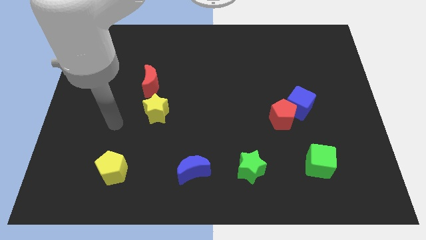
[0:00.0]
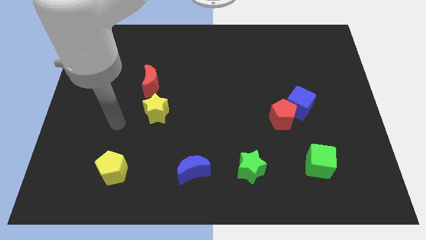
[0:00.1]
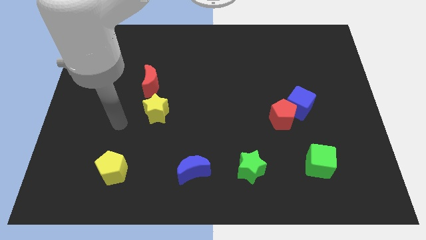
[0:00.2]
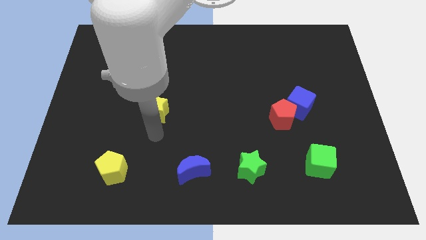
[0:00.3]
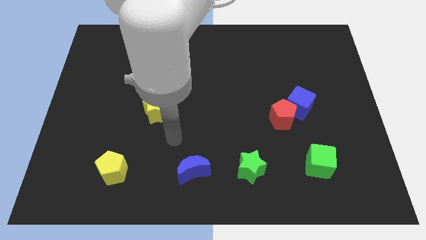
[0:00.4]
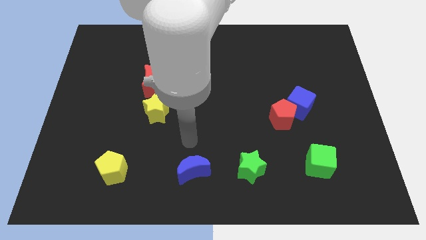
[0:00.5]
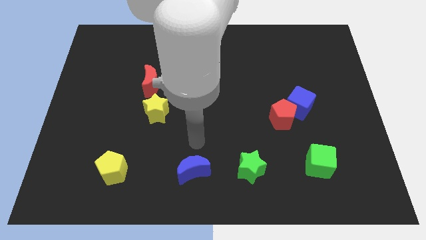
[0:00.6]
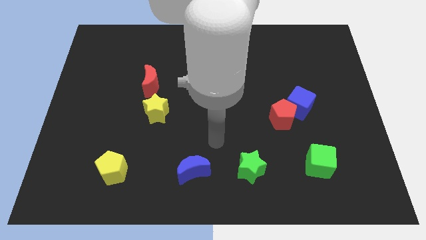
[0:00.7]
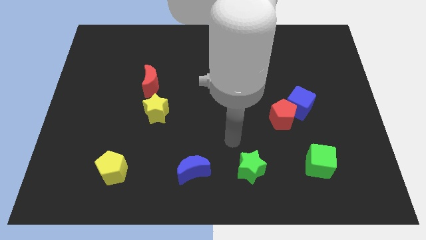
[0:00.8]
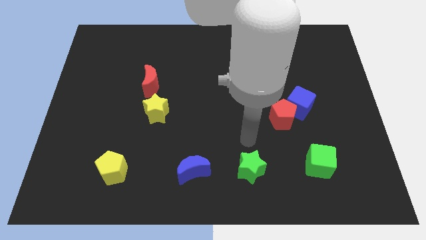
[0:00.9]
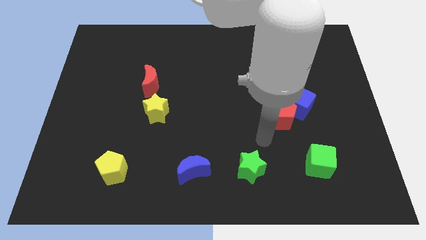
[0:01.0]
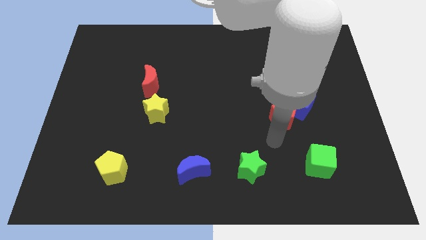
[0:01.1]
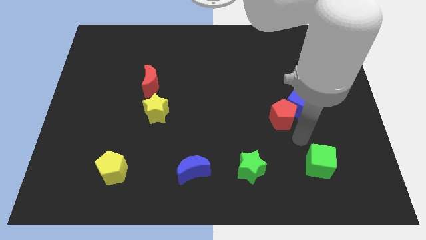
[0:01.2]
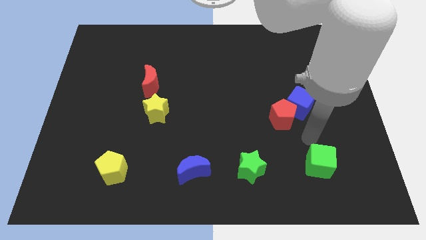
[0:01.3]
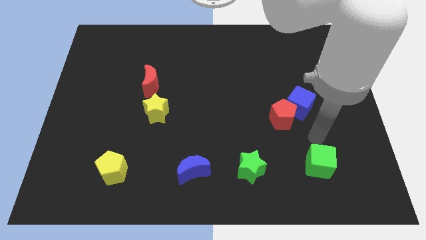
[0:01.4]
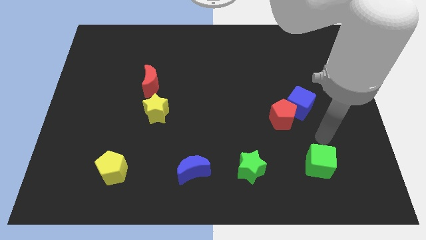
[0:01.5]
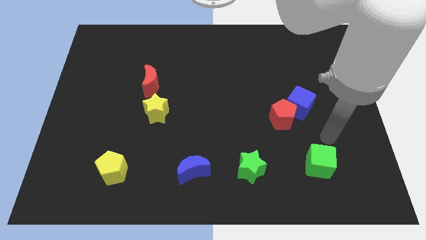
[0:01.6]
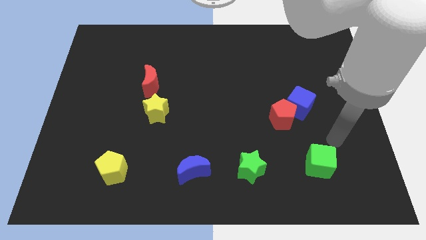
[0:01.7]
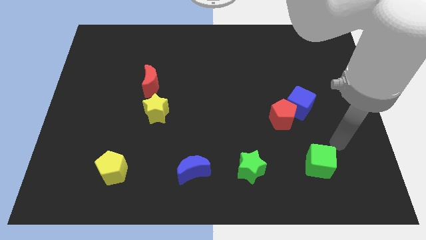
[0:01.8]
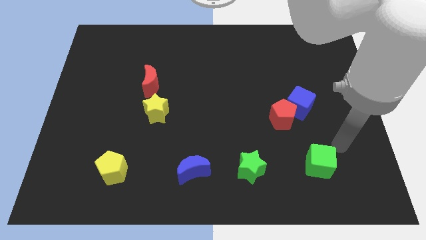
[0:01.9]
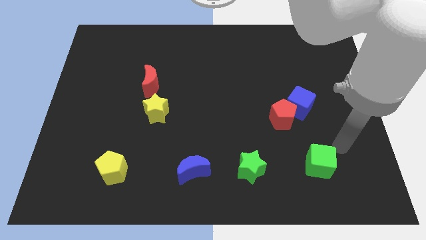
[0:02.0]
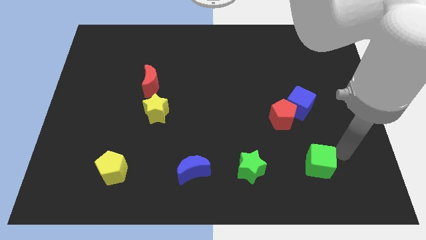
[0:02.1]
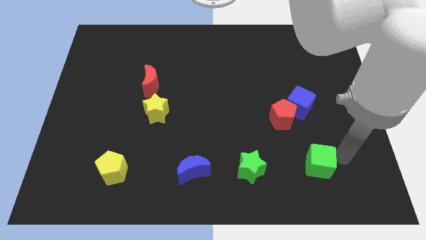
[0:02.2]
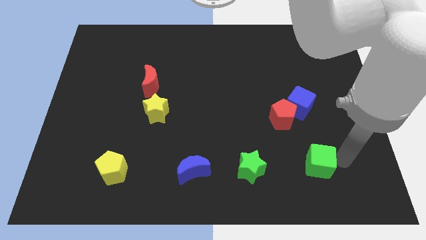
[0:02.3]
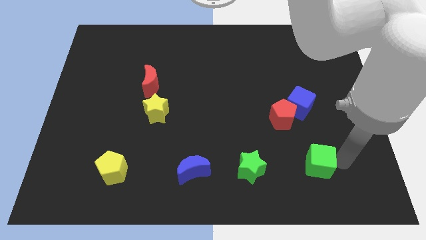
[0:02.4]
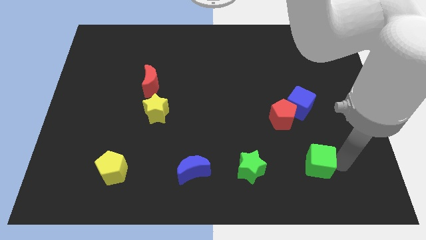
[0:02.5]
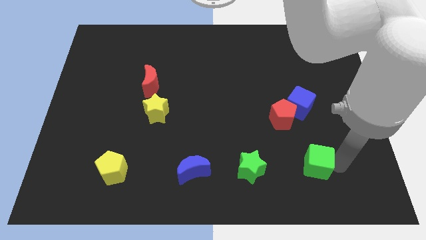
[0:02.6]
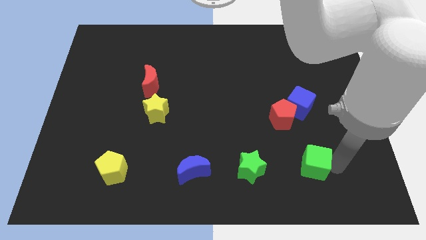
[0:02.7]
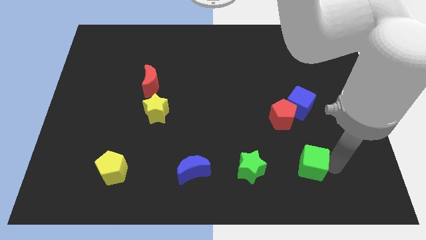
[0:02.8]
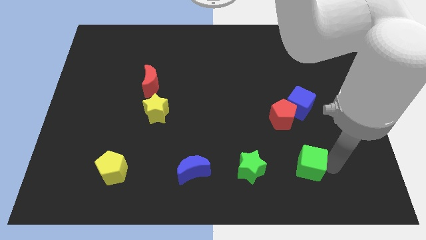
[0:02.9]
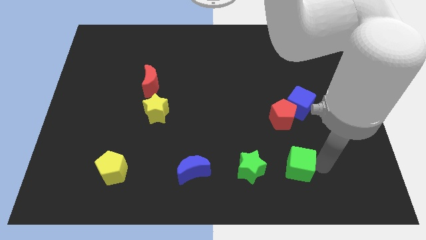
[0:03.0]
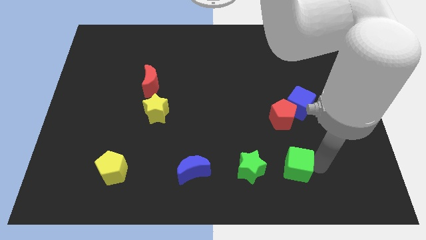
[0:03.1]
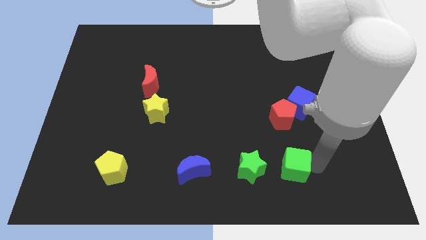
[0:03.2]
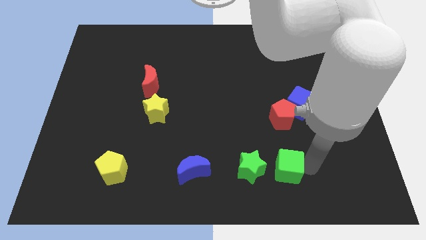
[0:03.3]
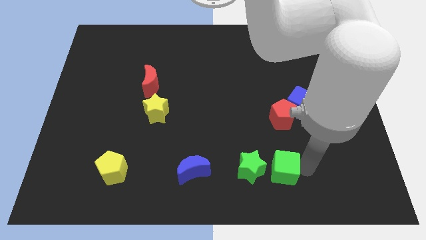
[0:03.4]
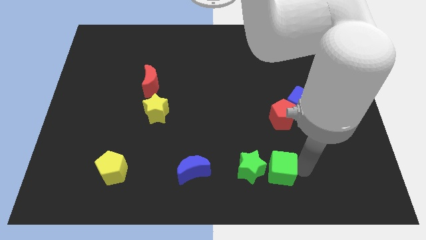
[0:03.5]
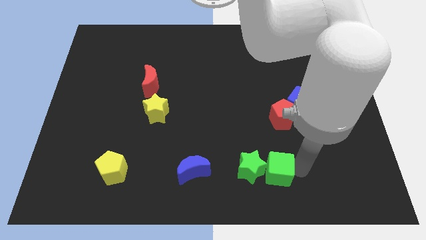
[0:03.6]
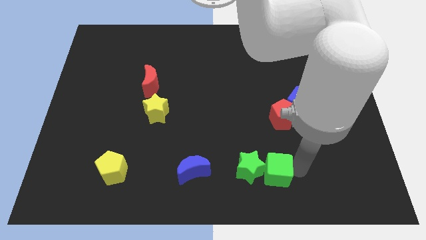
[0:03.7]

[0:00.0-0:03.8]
put the green cube next to the green star

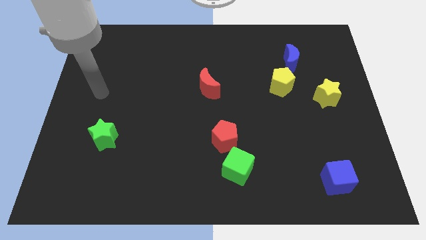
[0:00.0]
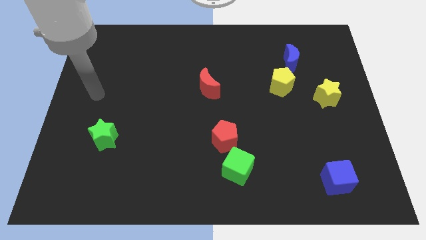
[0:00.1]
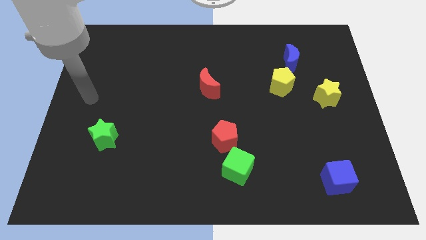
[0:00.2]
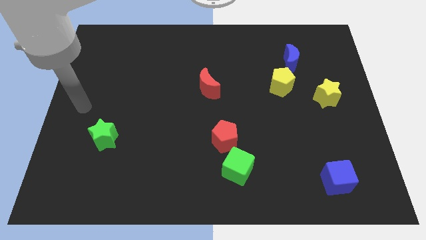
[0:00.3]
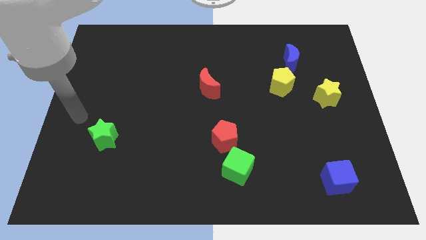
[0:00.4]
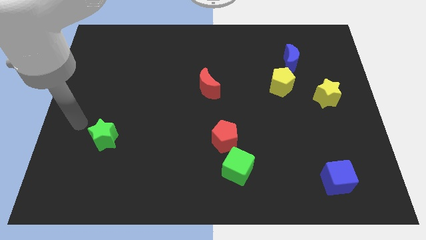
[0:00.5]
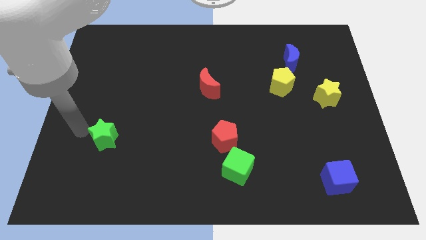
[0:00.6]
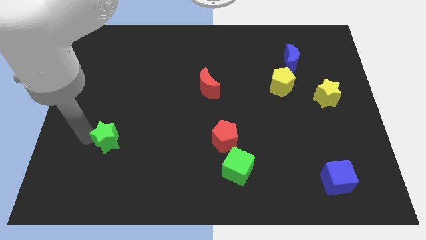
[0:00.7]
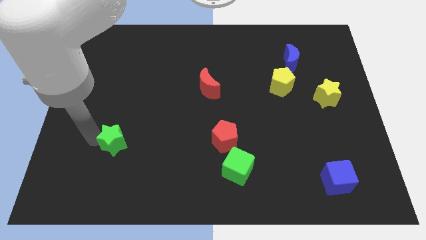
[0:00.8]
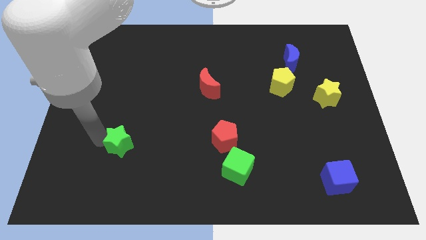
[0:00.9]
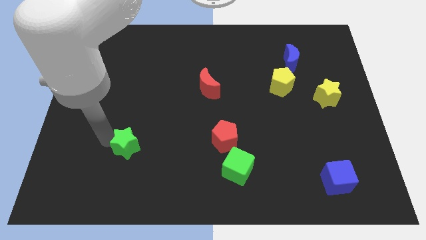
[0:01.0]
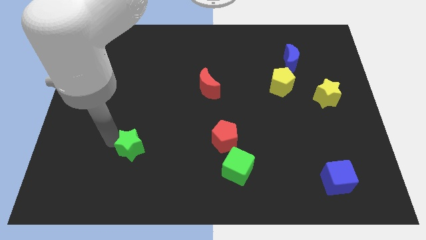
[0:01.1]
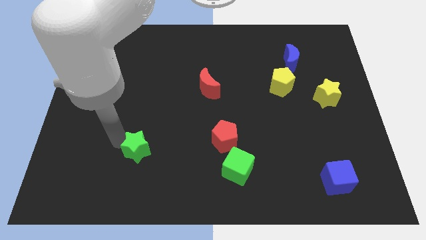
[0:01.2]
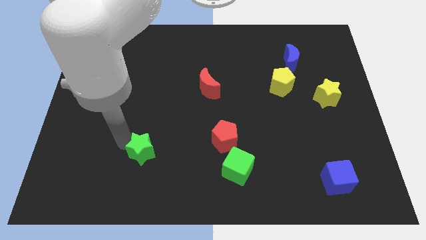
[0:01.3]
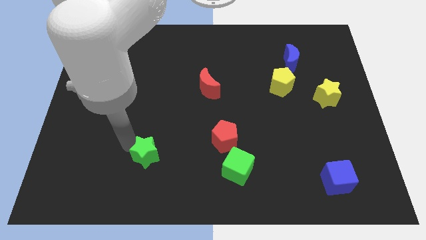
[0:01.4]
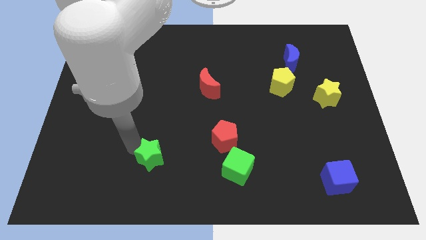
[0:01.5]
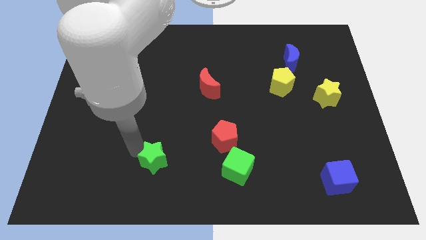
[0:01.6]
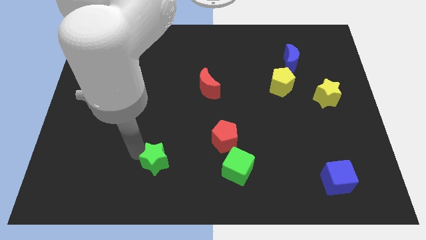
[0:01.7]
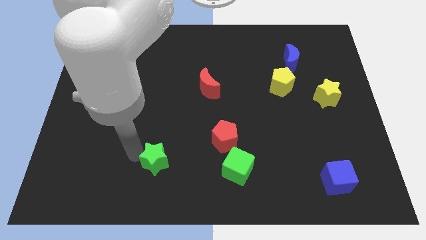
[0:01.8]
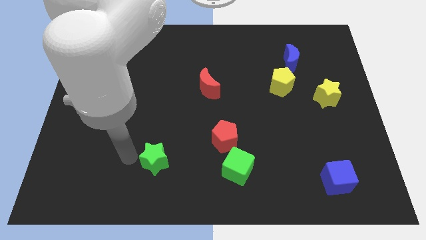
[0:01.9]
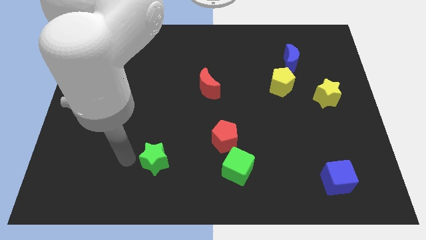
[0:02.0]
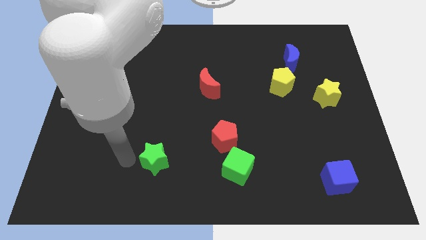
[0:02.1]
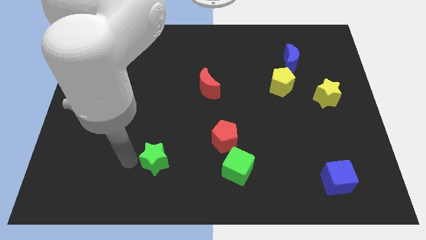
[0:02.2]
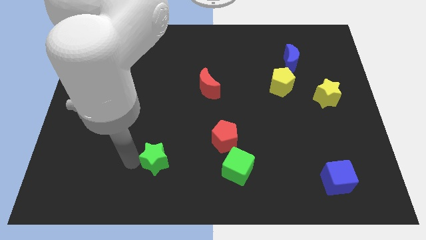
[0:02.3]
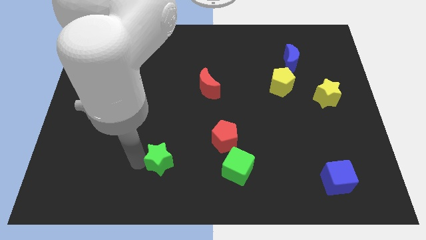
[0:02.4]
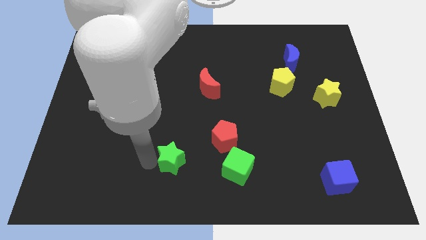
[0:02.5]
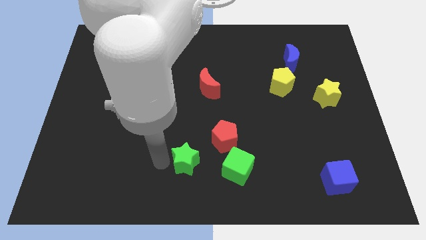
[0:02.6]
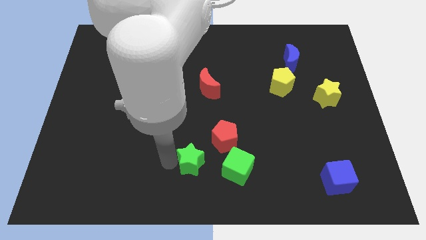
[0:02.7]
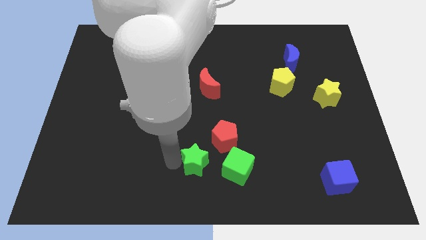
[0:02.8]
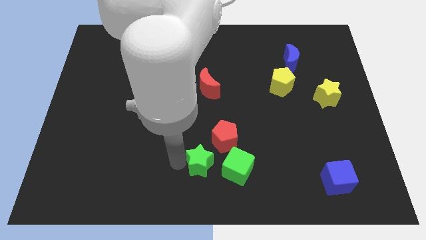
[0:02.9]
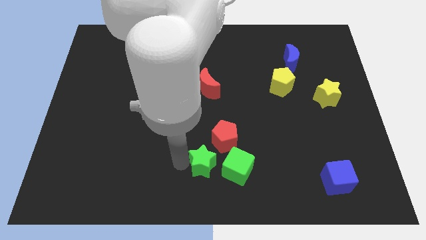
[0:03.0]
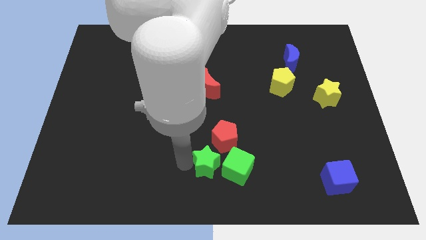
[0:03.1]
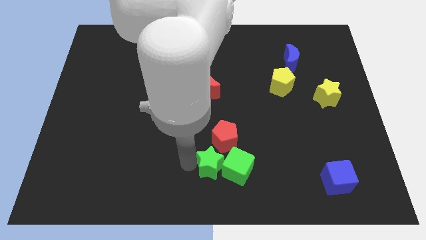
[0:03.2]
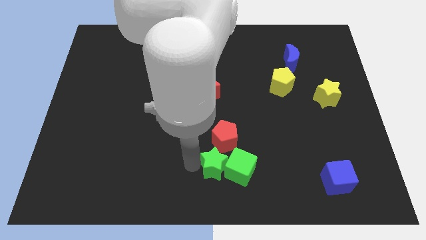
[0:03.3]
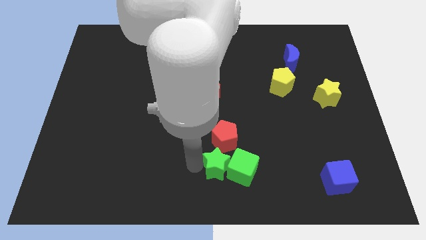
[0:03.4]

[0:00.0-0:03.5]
move the green star next to the green cube

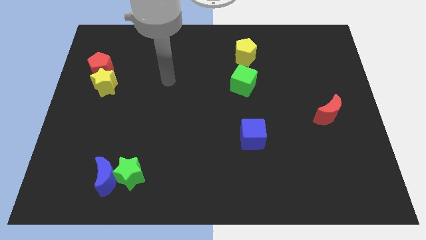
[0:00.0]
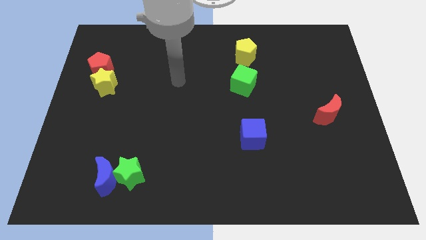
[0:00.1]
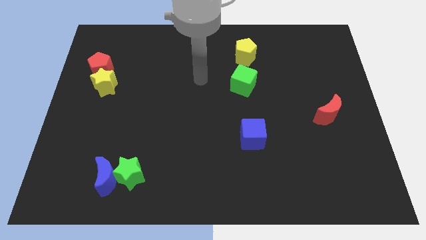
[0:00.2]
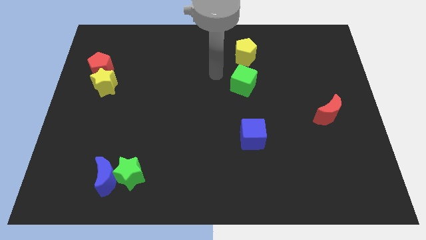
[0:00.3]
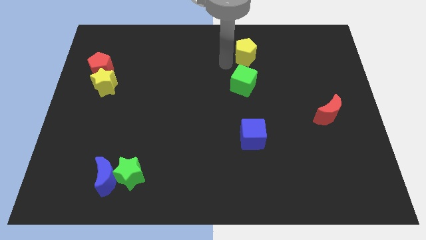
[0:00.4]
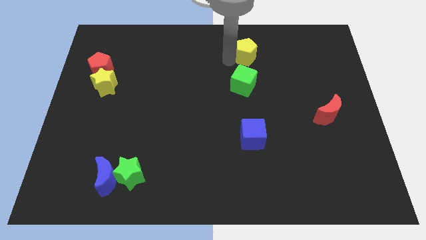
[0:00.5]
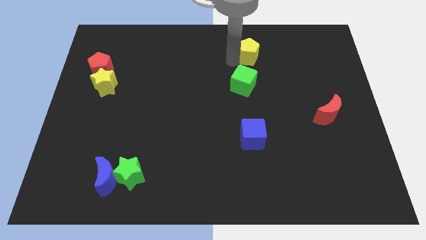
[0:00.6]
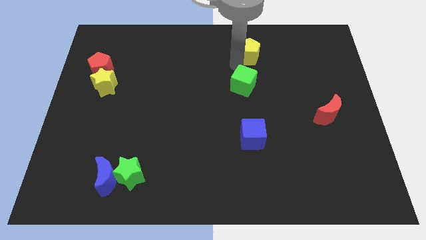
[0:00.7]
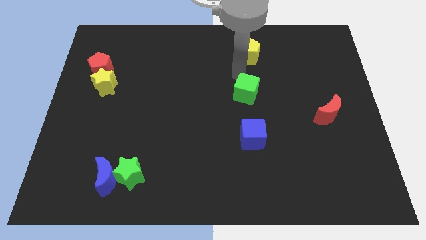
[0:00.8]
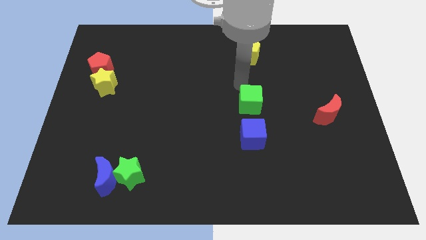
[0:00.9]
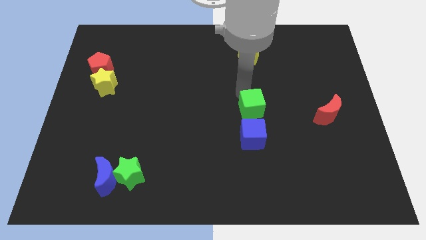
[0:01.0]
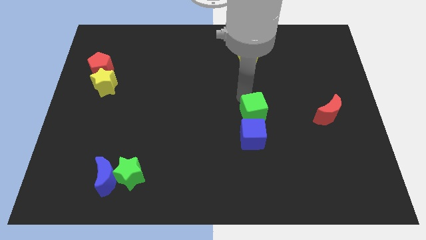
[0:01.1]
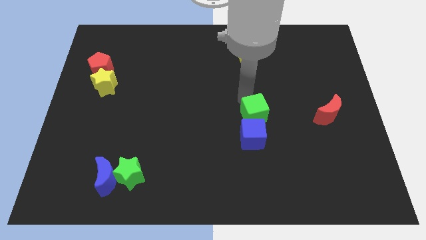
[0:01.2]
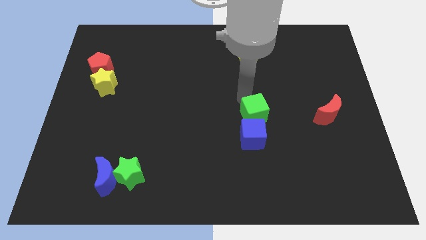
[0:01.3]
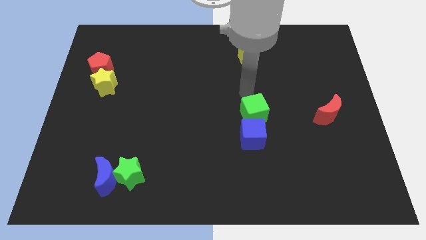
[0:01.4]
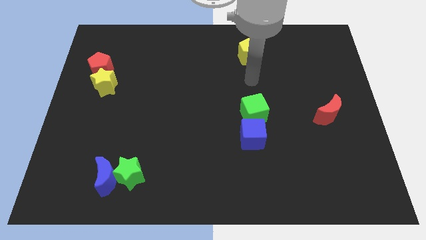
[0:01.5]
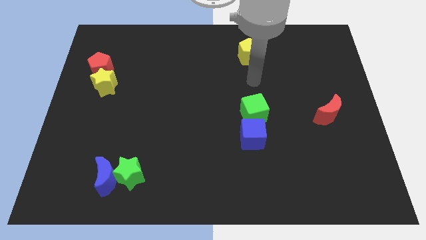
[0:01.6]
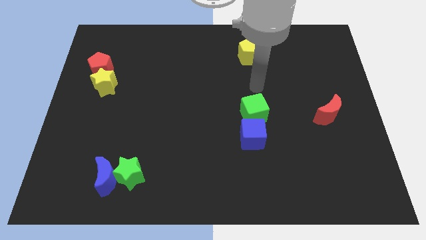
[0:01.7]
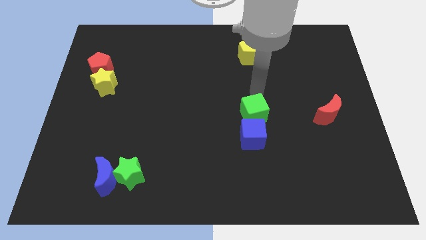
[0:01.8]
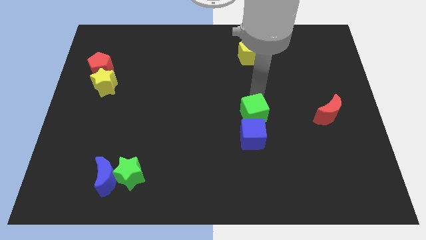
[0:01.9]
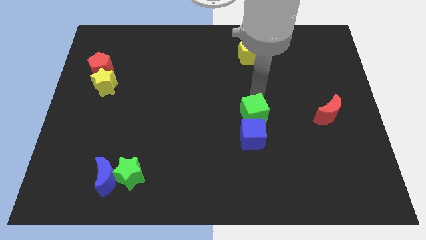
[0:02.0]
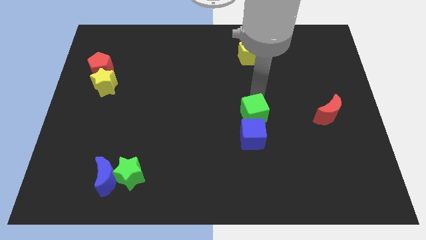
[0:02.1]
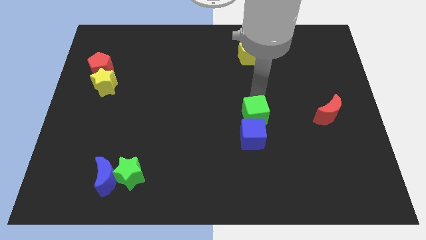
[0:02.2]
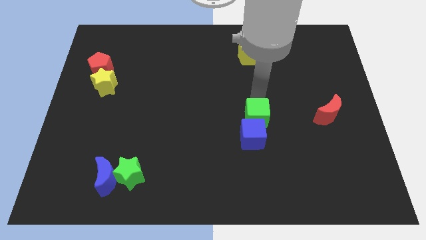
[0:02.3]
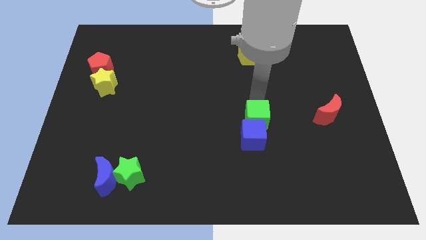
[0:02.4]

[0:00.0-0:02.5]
slide the green cube to the blue cube
